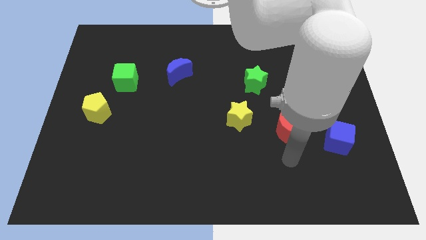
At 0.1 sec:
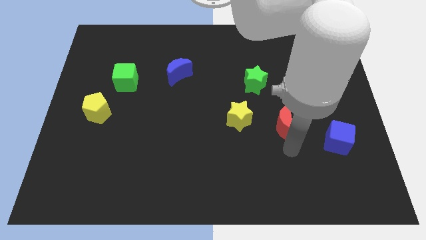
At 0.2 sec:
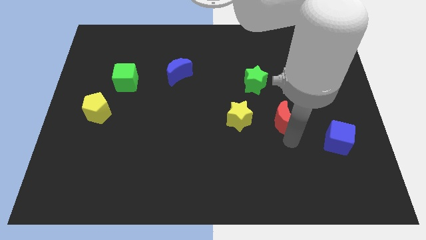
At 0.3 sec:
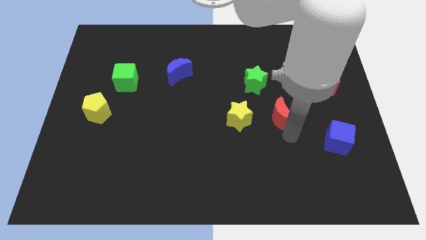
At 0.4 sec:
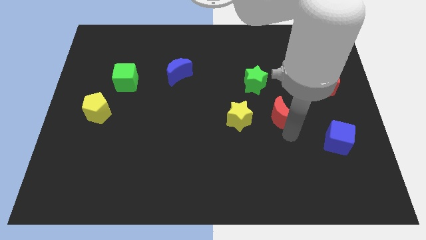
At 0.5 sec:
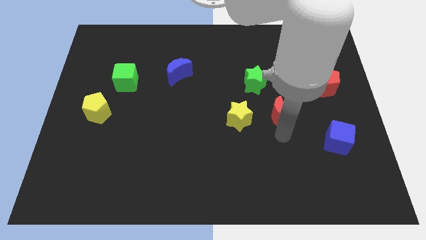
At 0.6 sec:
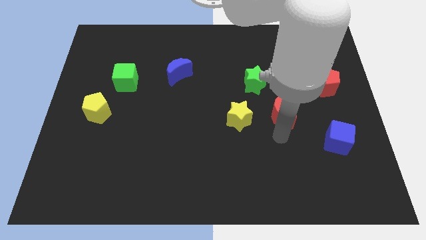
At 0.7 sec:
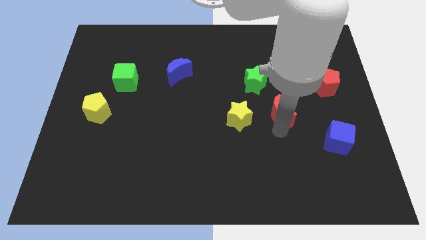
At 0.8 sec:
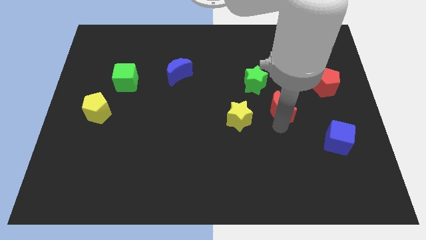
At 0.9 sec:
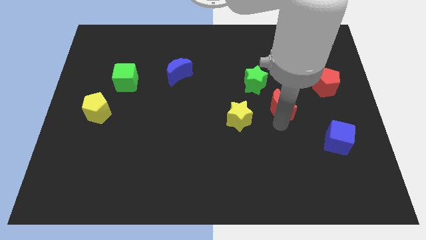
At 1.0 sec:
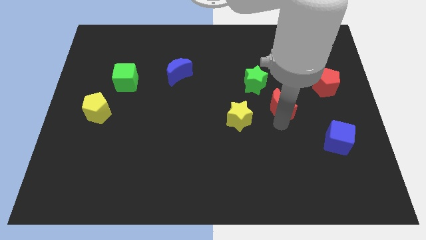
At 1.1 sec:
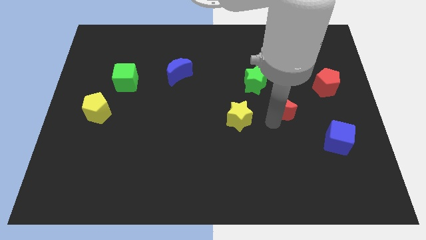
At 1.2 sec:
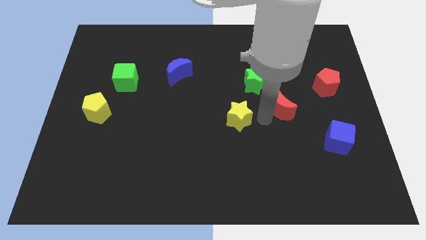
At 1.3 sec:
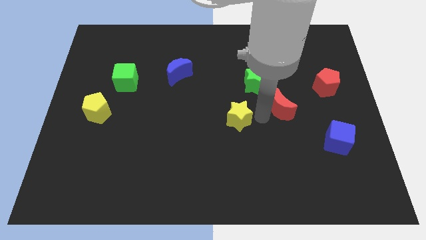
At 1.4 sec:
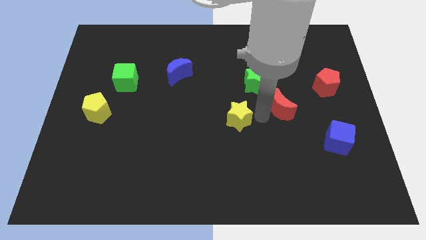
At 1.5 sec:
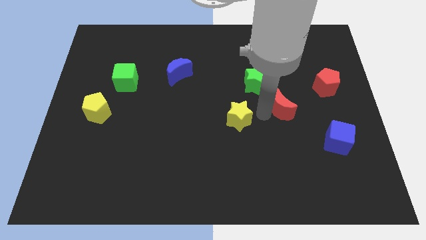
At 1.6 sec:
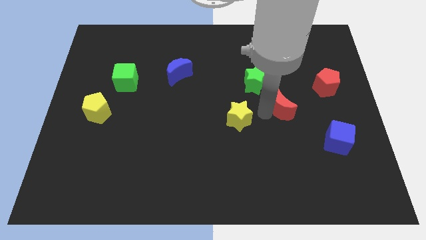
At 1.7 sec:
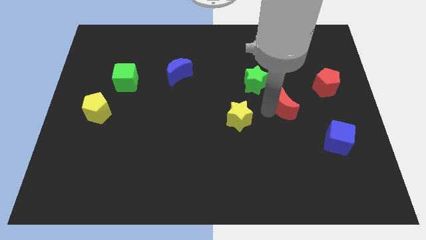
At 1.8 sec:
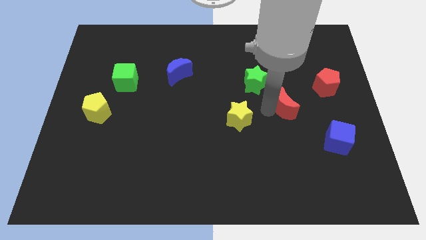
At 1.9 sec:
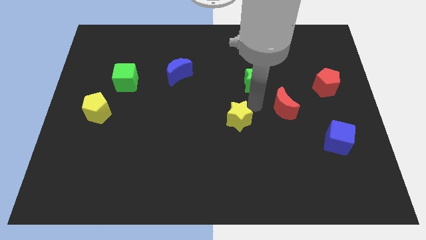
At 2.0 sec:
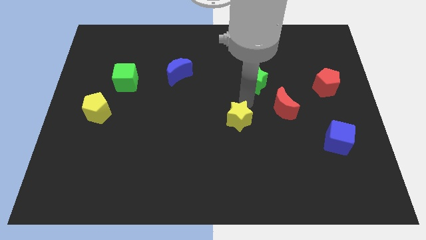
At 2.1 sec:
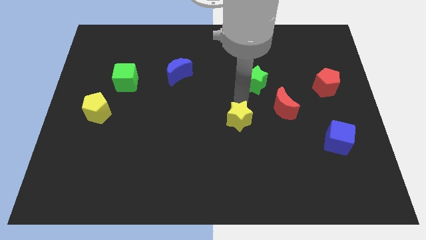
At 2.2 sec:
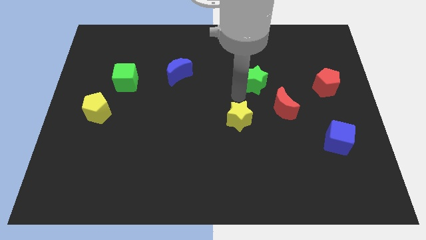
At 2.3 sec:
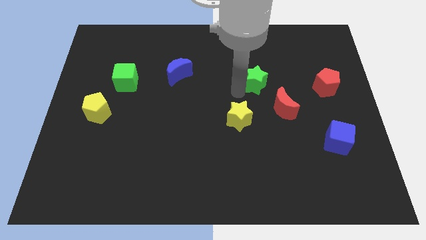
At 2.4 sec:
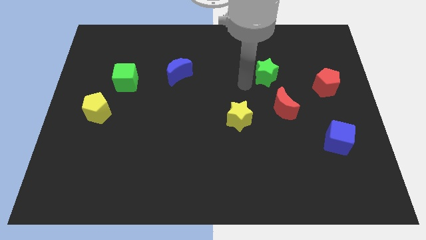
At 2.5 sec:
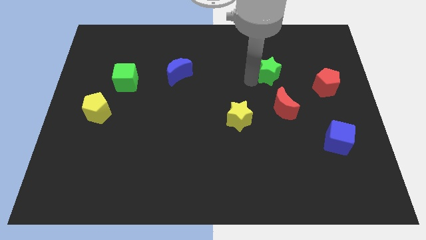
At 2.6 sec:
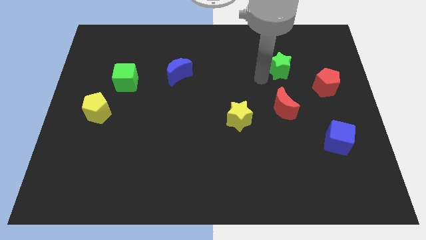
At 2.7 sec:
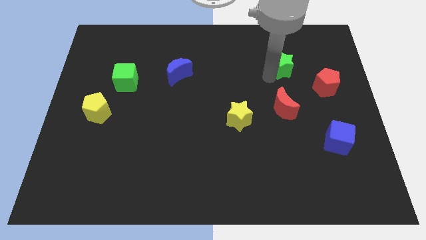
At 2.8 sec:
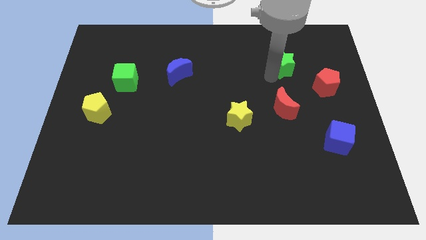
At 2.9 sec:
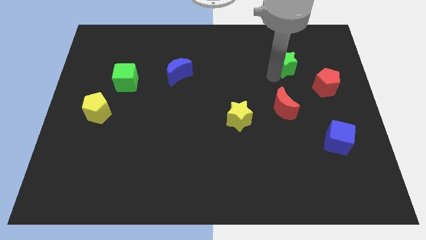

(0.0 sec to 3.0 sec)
place green star to the top of red moon

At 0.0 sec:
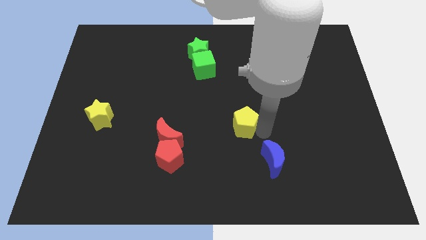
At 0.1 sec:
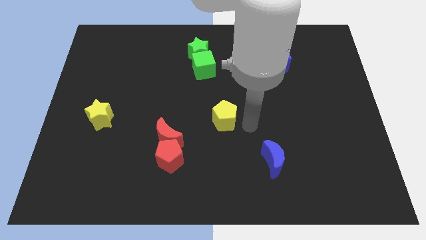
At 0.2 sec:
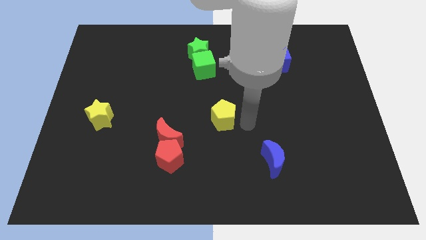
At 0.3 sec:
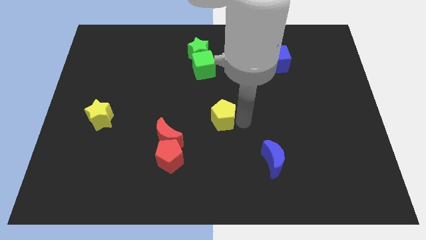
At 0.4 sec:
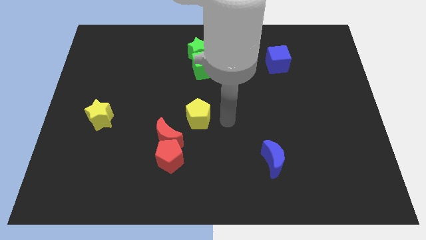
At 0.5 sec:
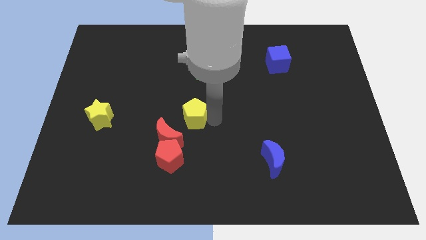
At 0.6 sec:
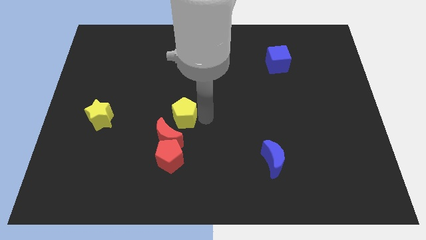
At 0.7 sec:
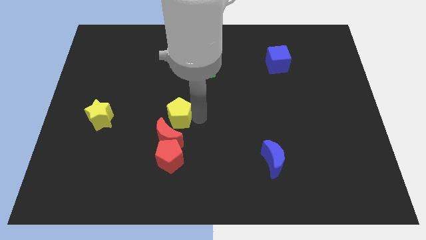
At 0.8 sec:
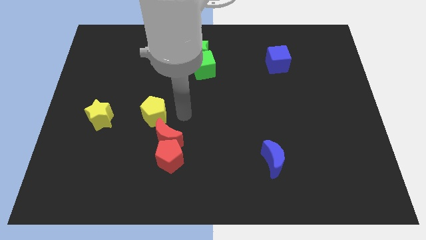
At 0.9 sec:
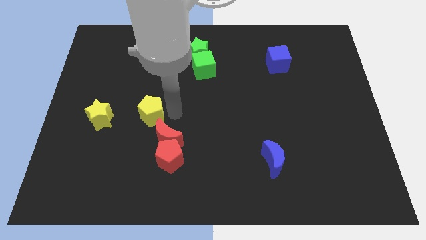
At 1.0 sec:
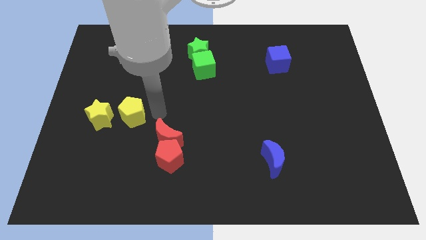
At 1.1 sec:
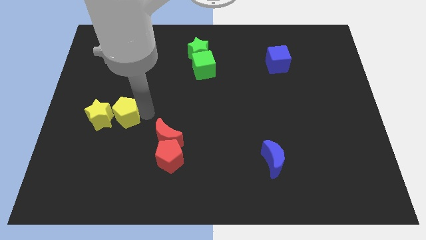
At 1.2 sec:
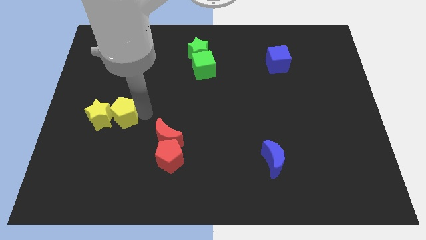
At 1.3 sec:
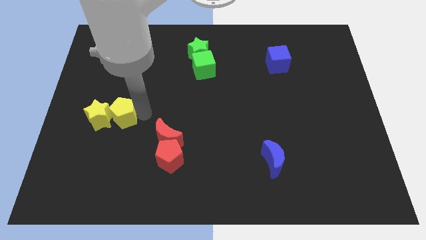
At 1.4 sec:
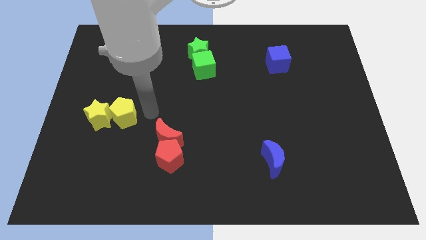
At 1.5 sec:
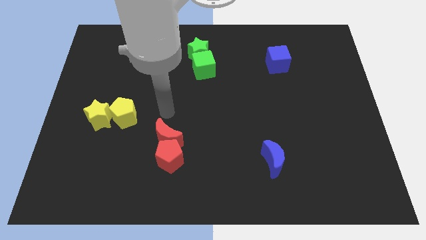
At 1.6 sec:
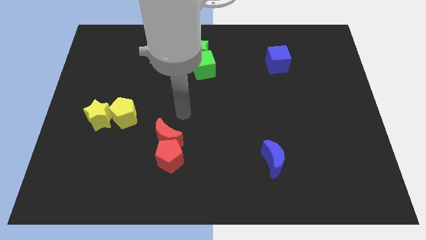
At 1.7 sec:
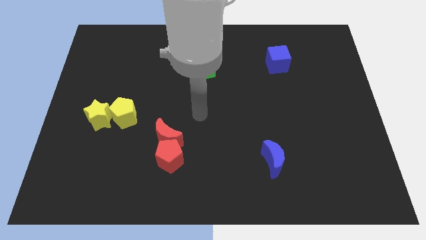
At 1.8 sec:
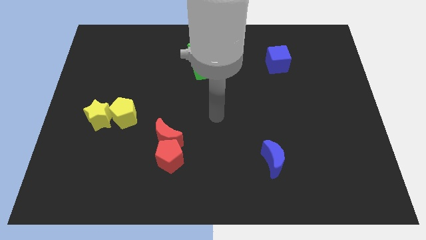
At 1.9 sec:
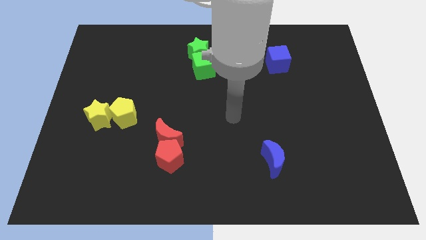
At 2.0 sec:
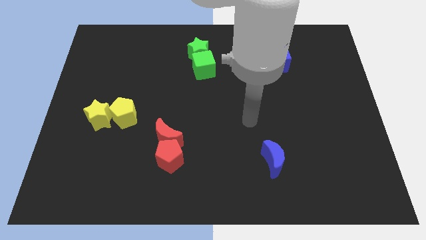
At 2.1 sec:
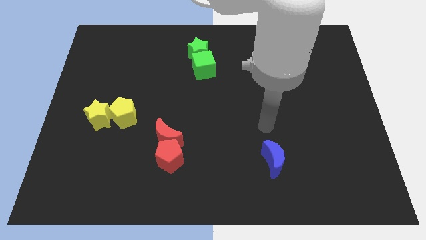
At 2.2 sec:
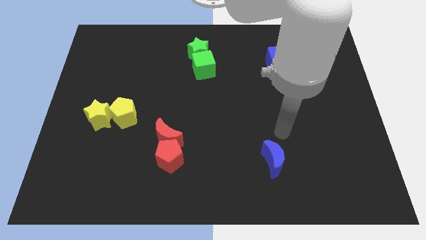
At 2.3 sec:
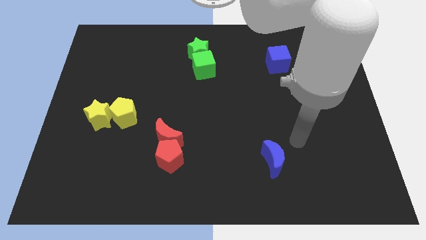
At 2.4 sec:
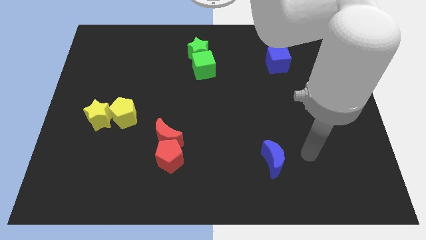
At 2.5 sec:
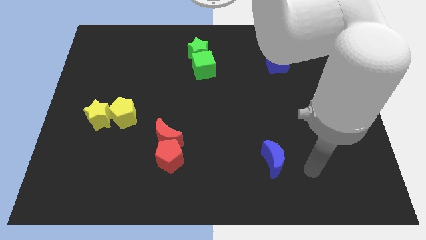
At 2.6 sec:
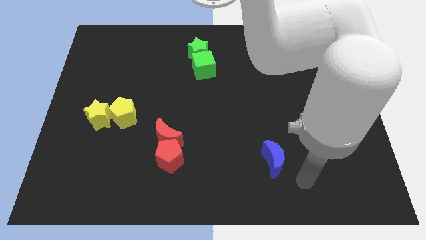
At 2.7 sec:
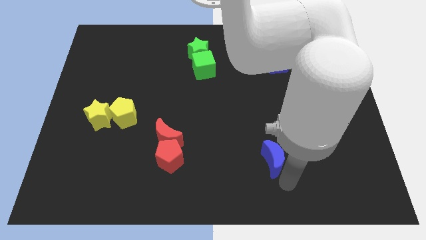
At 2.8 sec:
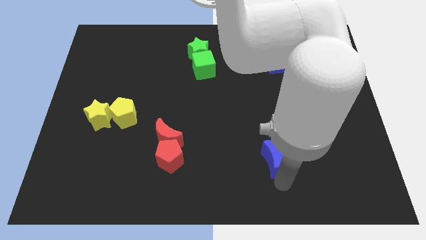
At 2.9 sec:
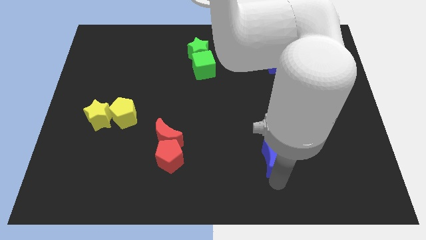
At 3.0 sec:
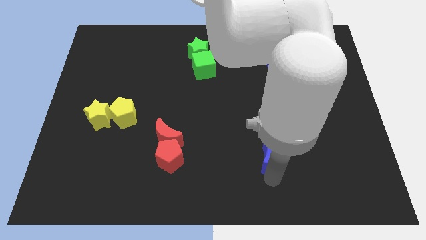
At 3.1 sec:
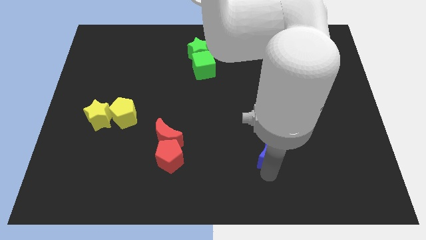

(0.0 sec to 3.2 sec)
push the yellow pentagon into the yellow star

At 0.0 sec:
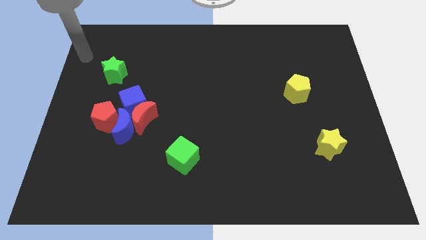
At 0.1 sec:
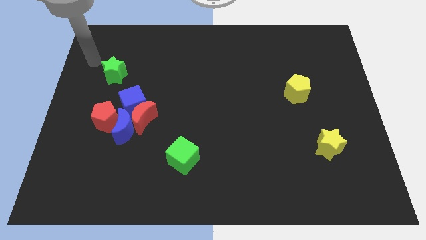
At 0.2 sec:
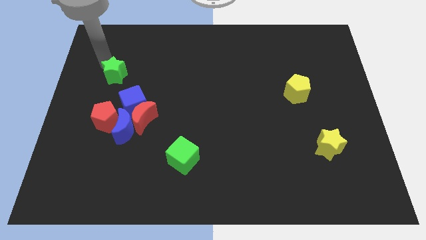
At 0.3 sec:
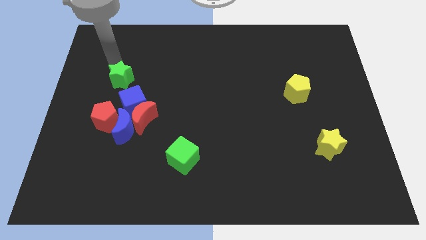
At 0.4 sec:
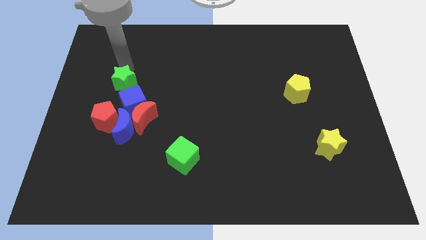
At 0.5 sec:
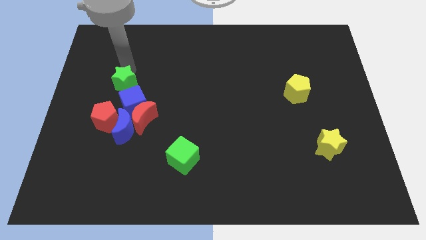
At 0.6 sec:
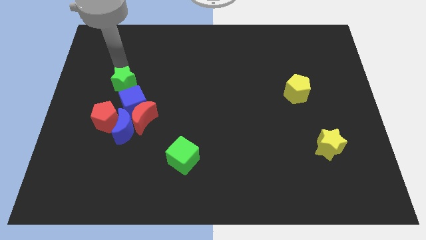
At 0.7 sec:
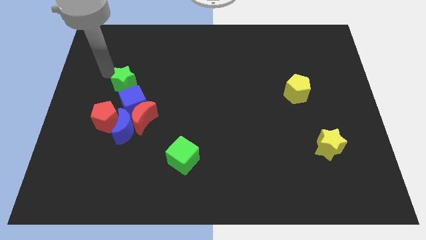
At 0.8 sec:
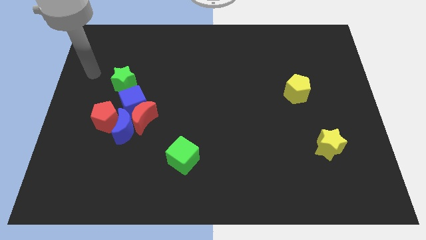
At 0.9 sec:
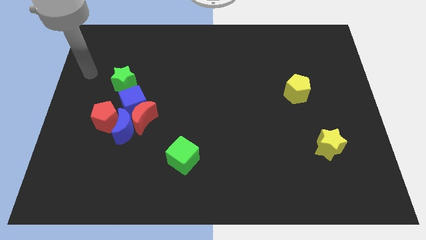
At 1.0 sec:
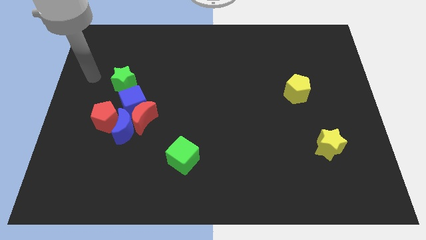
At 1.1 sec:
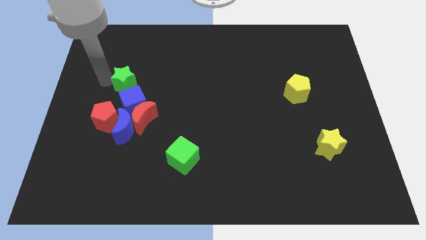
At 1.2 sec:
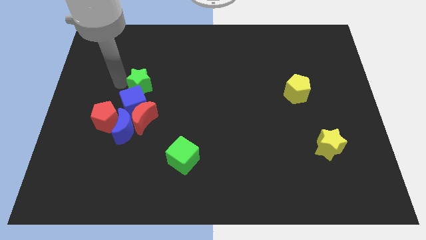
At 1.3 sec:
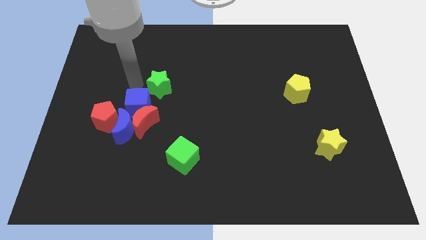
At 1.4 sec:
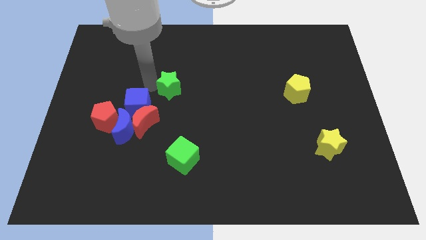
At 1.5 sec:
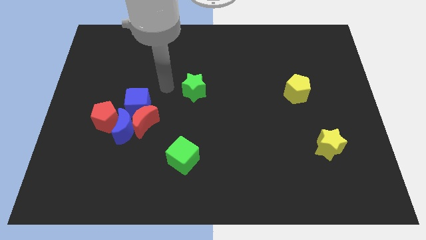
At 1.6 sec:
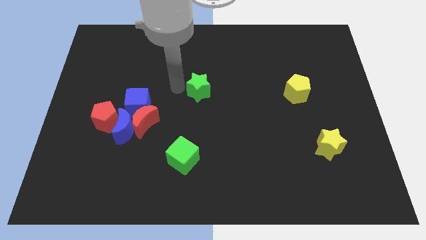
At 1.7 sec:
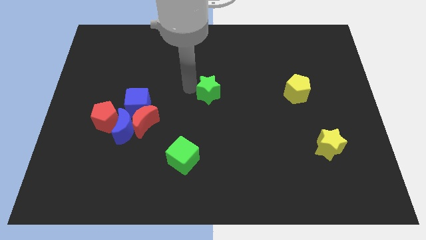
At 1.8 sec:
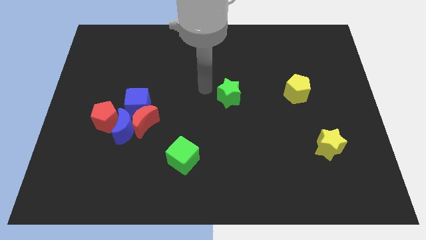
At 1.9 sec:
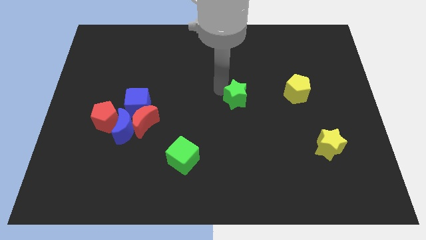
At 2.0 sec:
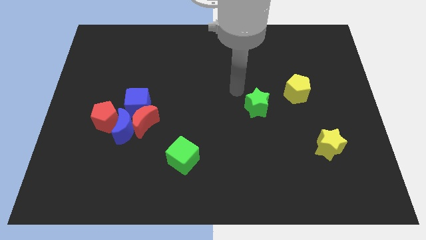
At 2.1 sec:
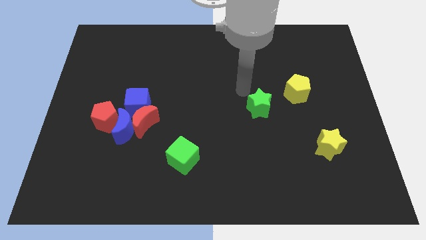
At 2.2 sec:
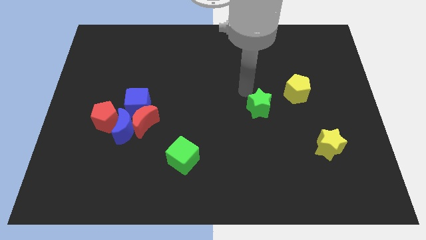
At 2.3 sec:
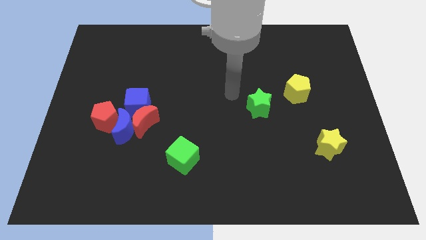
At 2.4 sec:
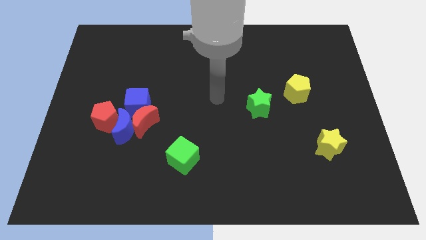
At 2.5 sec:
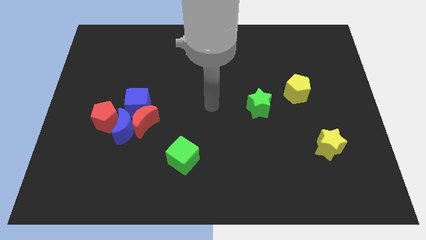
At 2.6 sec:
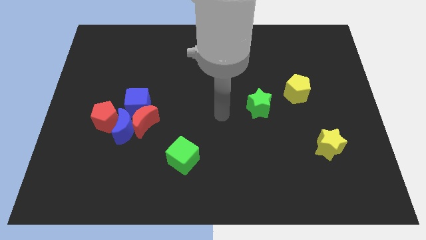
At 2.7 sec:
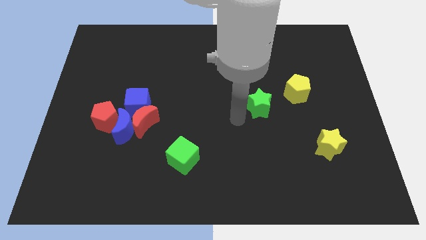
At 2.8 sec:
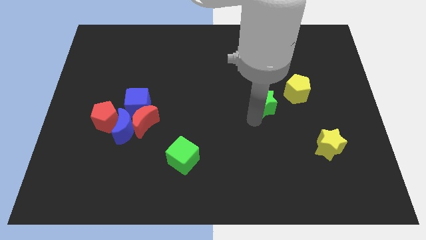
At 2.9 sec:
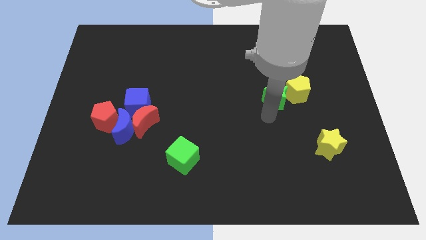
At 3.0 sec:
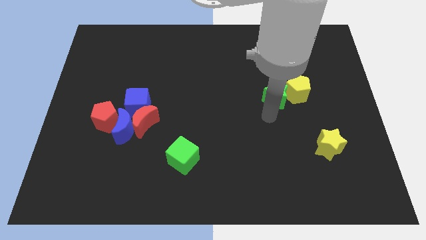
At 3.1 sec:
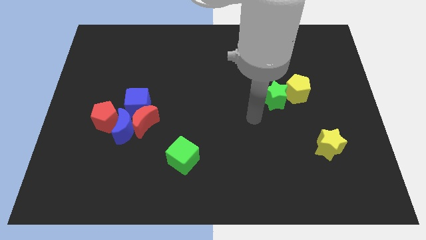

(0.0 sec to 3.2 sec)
push the green star to the right side of the board
